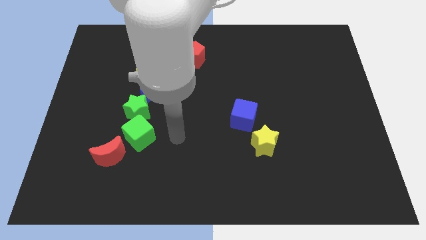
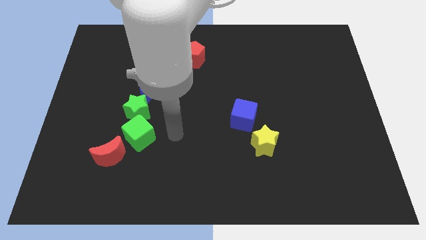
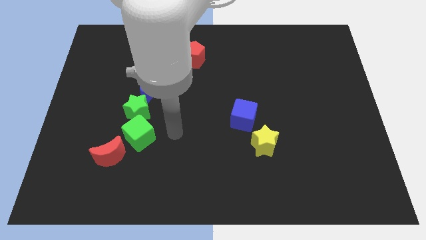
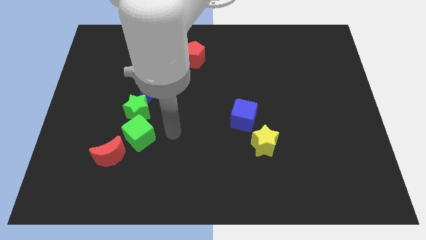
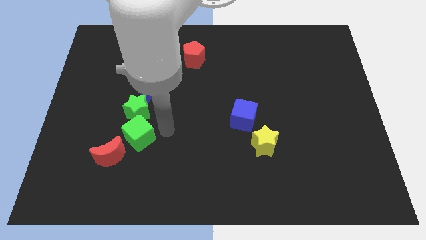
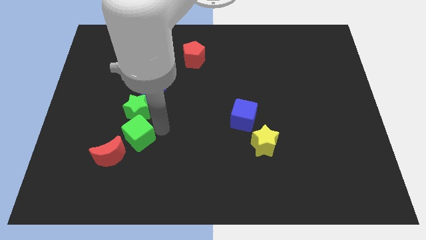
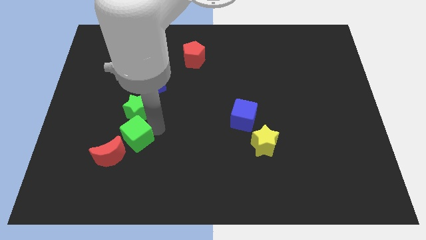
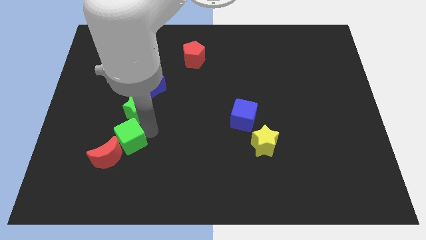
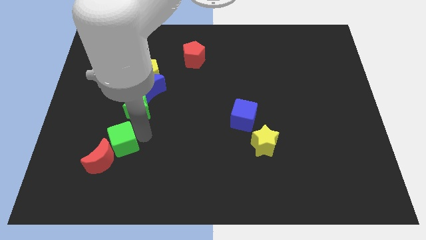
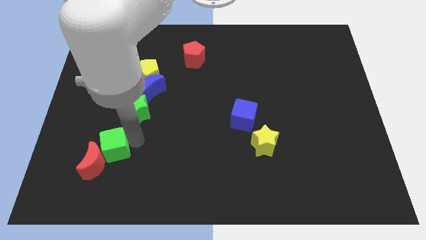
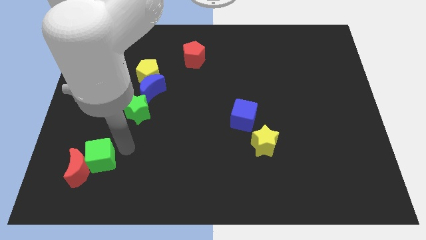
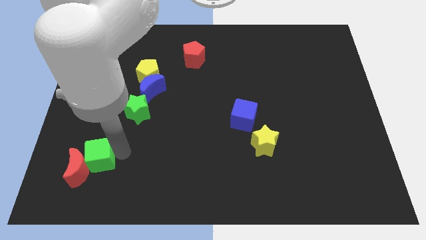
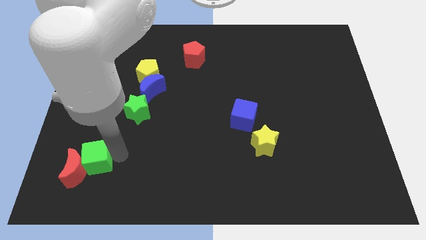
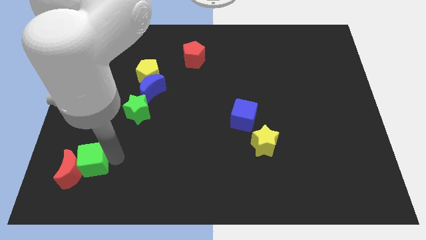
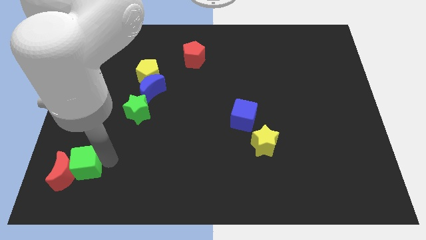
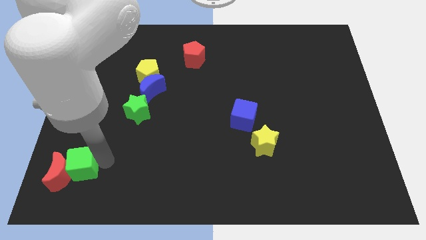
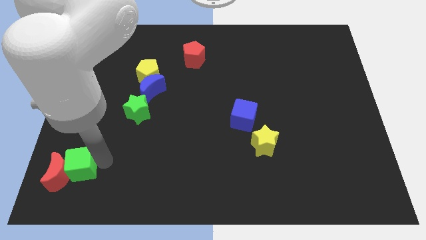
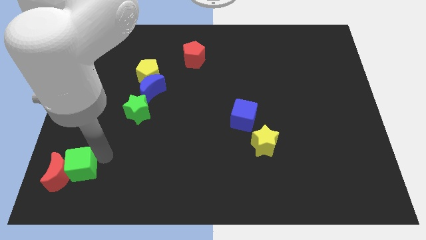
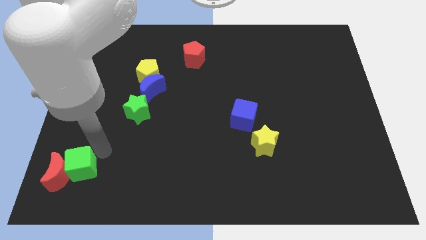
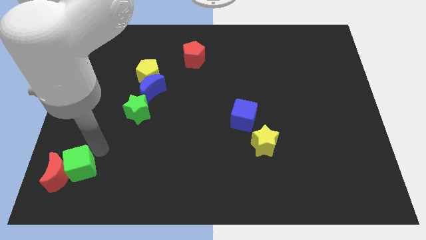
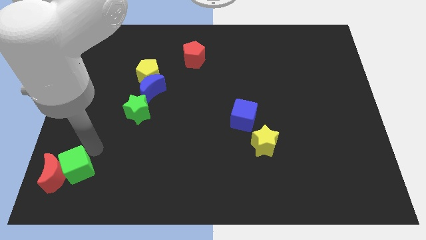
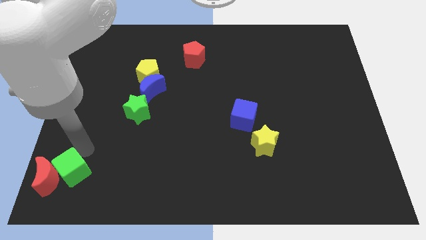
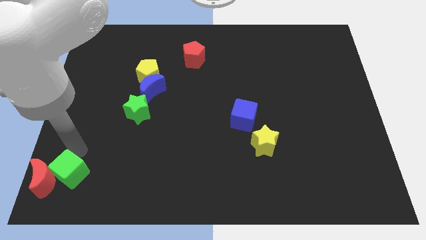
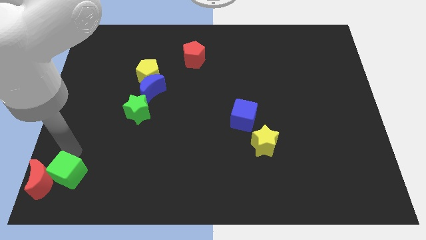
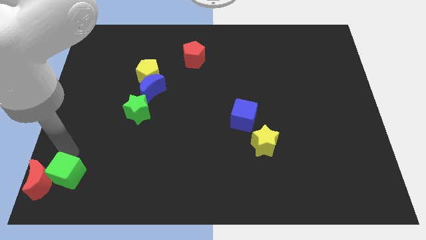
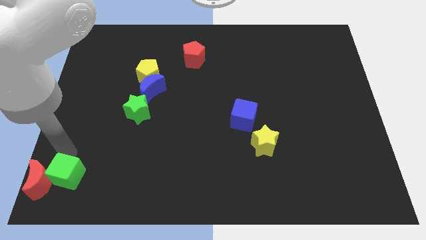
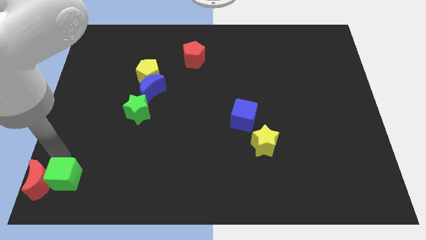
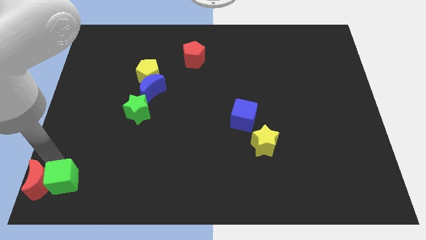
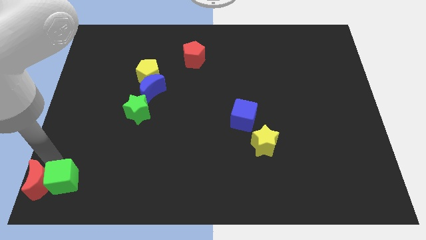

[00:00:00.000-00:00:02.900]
push the green and red moon to the bottom left corner of the board

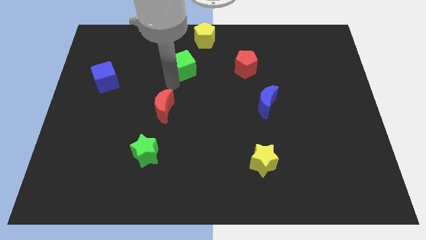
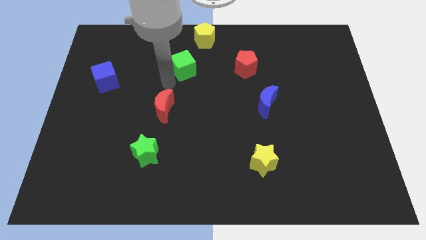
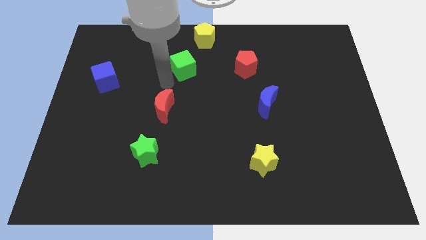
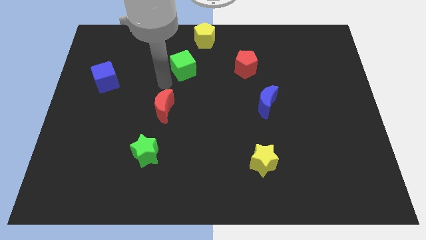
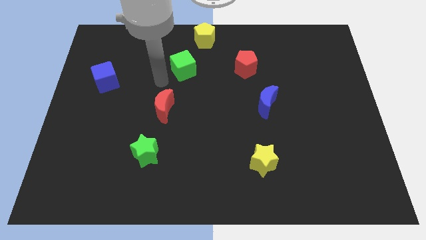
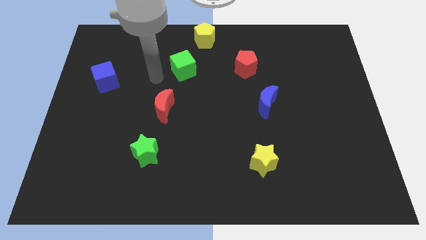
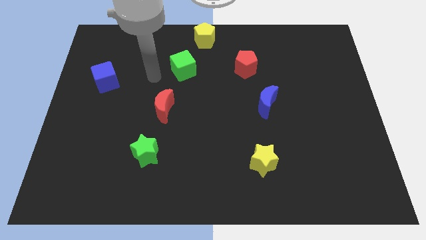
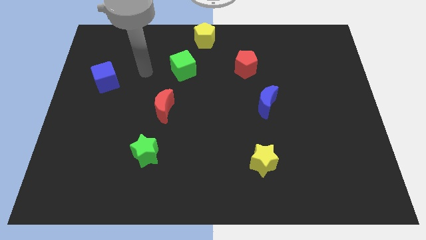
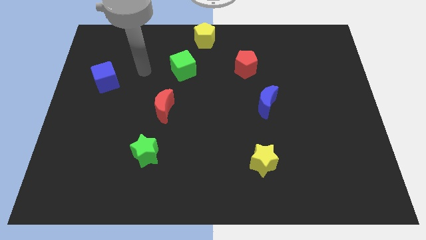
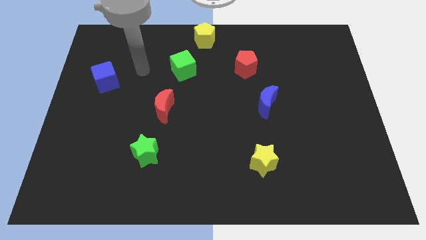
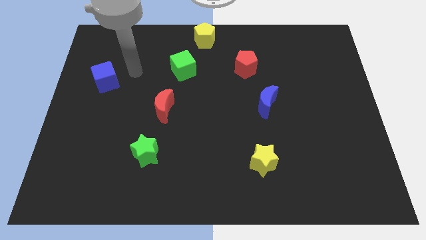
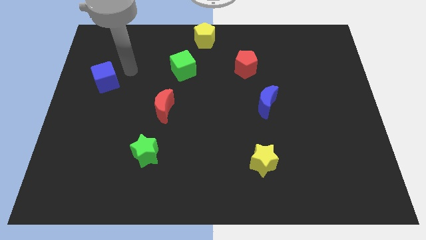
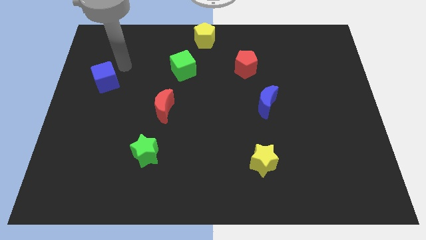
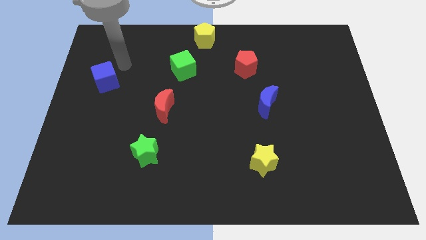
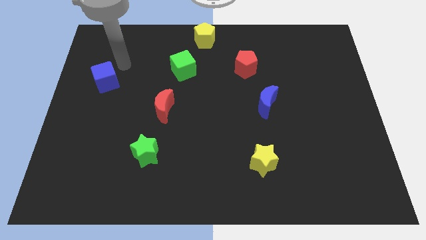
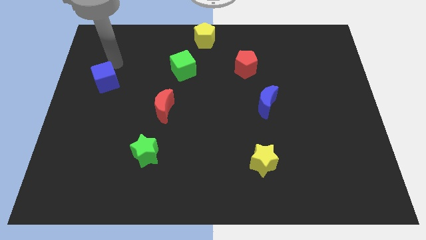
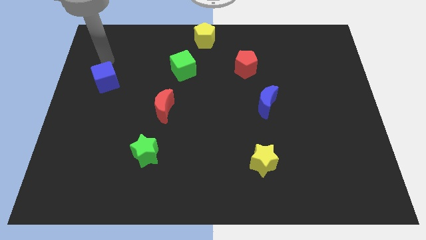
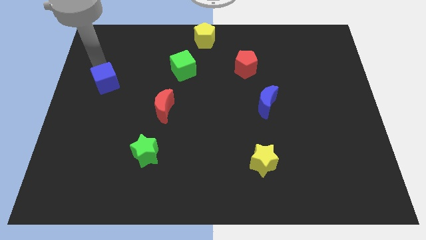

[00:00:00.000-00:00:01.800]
point your arm at the top side of the blue cube

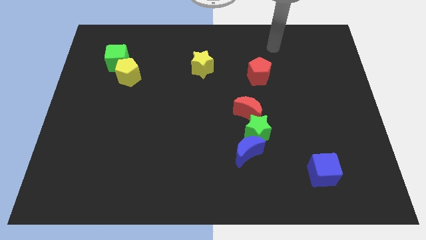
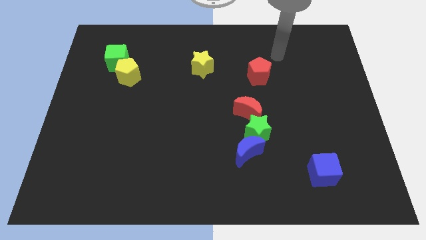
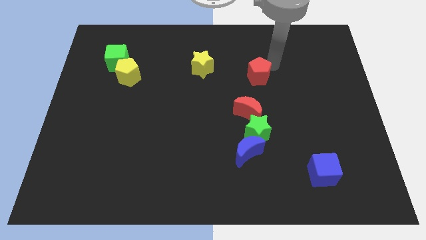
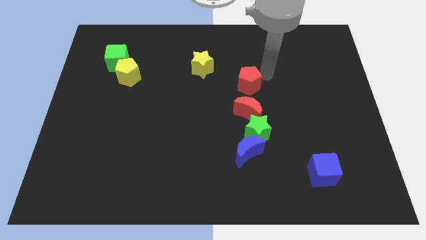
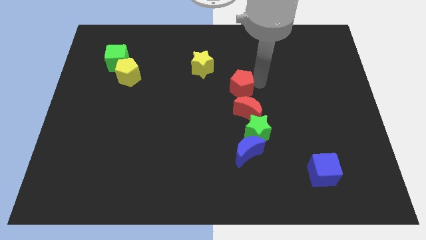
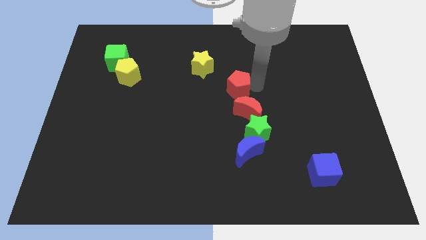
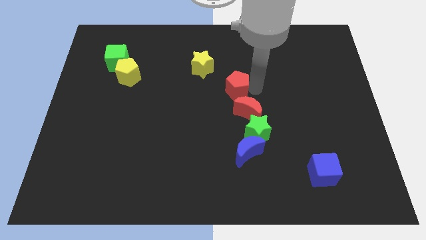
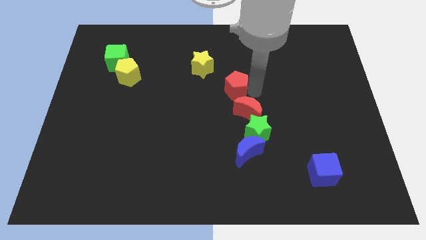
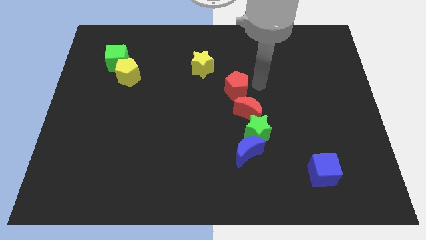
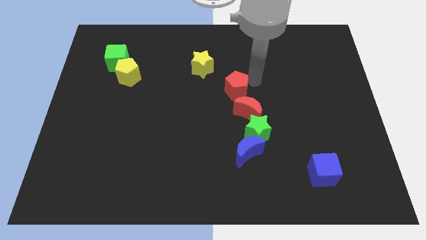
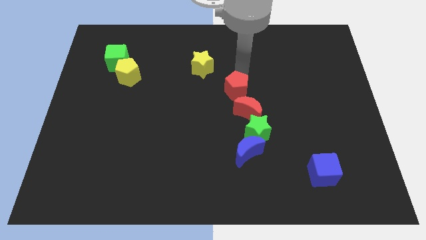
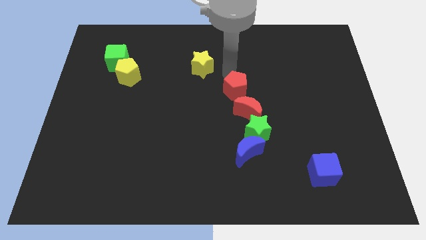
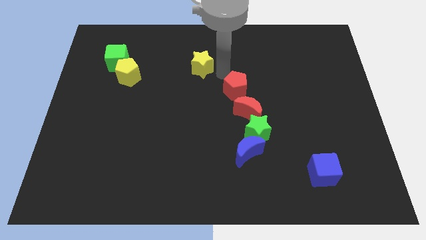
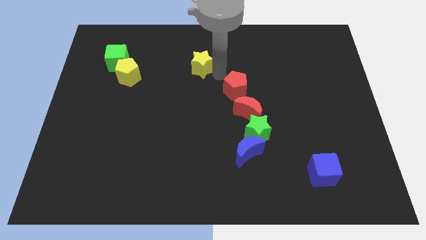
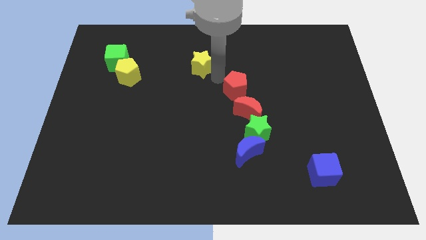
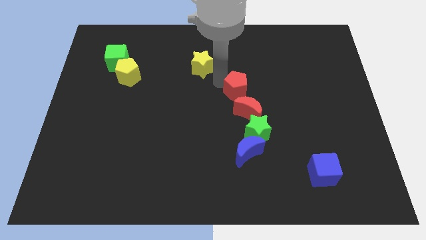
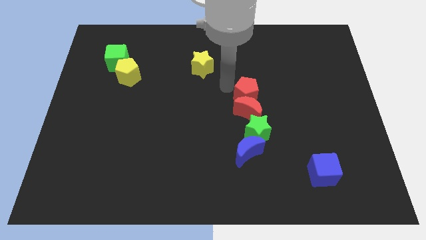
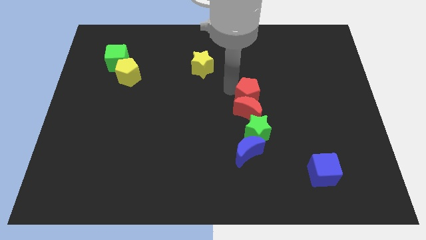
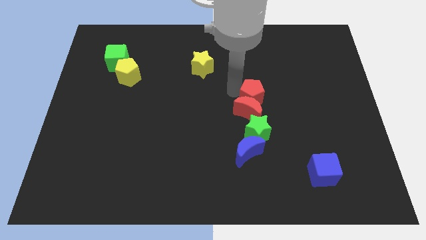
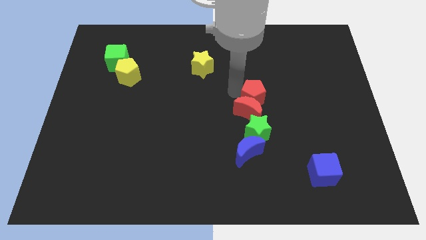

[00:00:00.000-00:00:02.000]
place the red pentagon above the red crescent

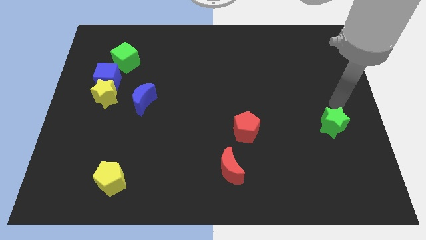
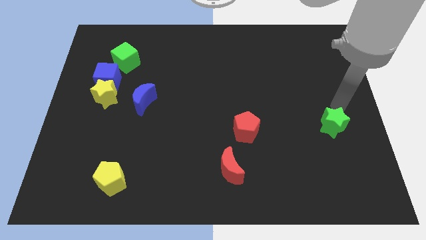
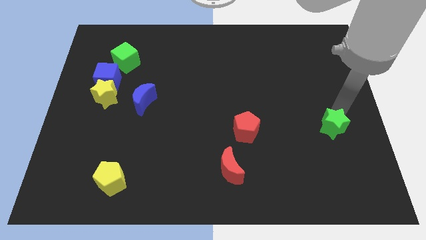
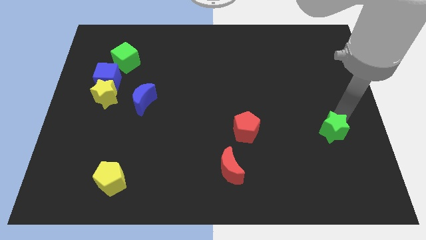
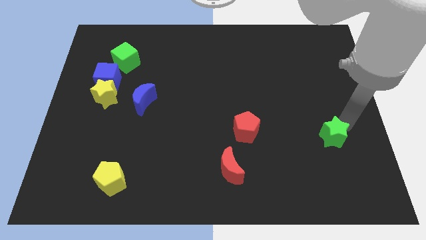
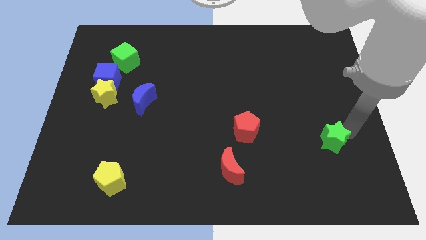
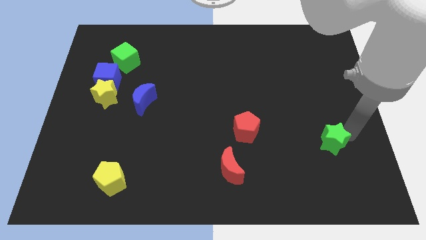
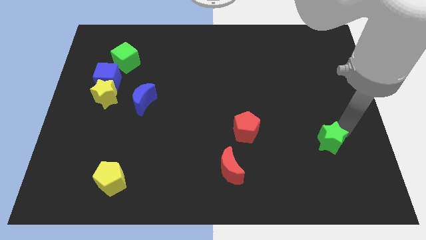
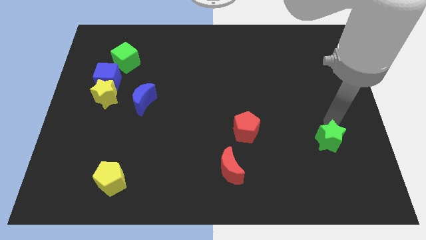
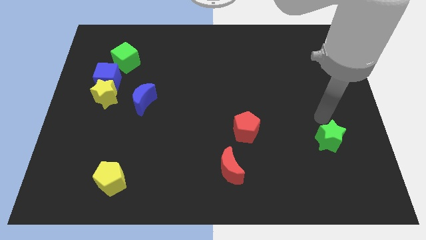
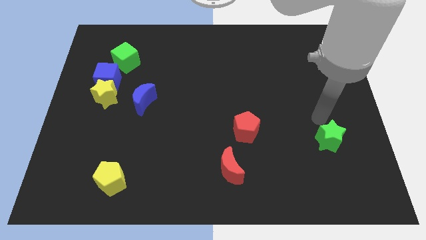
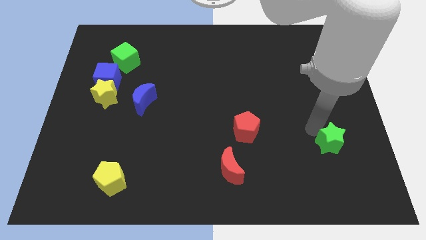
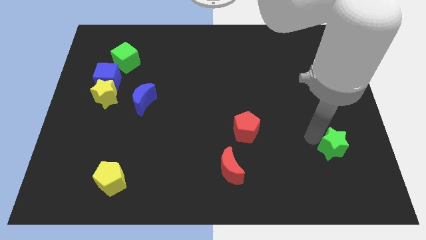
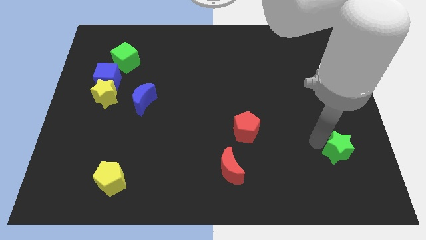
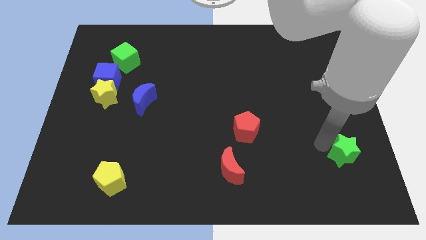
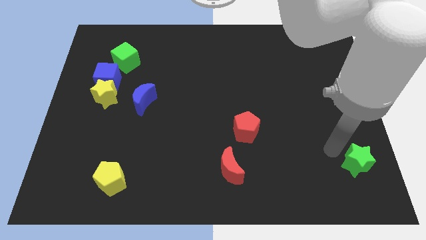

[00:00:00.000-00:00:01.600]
move green star slightly to the bottom side of the board

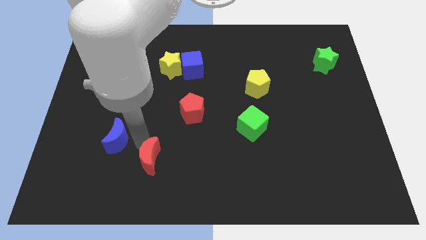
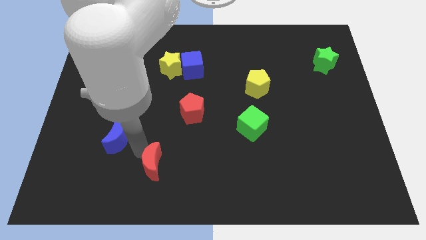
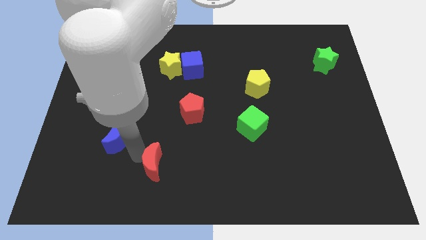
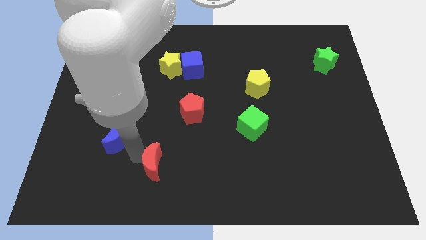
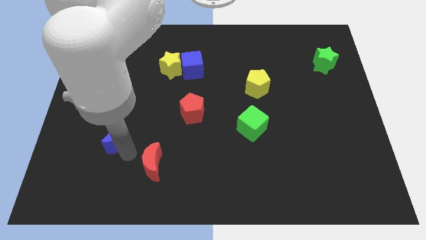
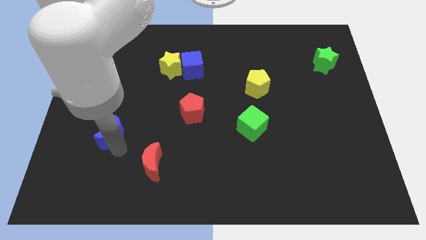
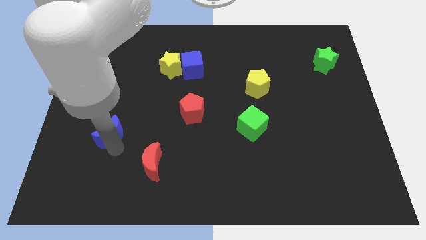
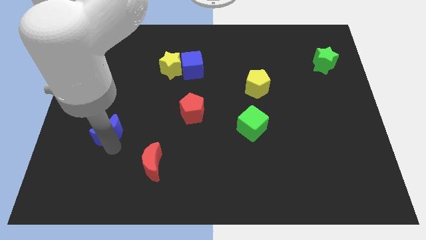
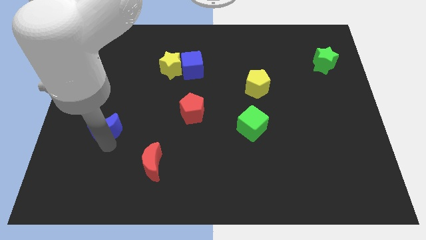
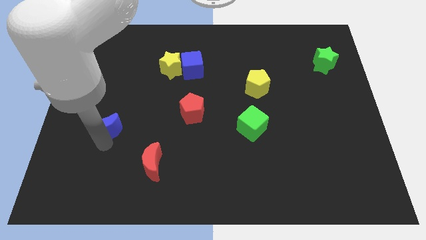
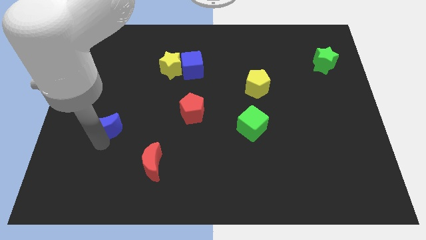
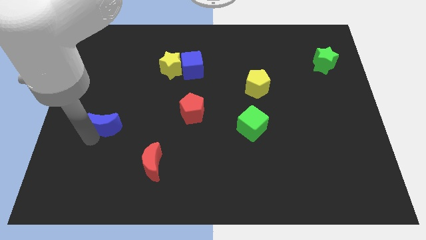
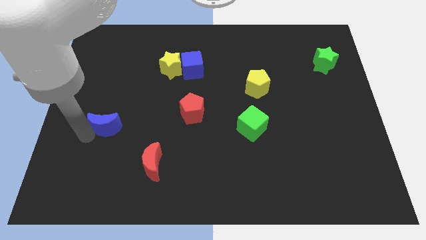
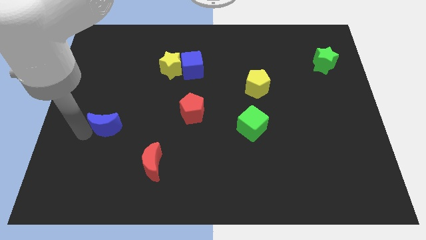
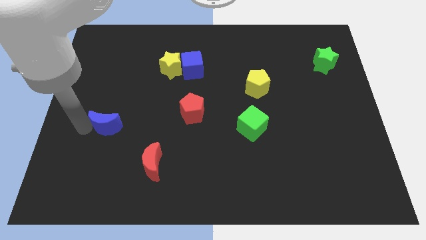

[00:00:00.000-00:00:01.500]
separate the blue moon from red moon
